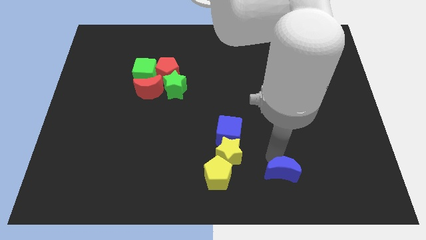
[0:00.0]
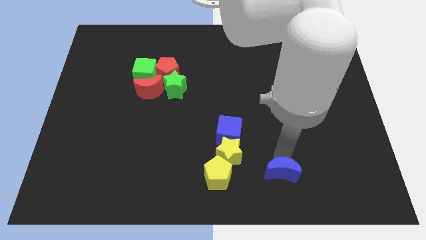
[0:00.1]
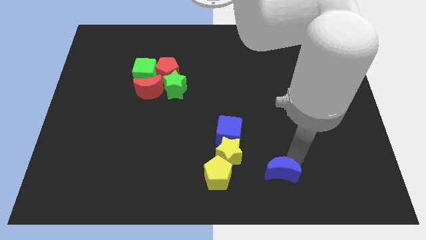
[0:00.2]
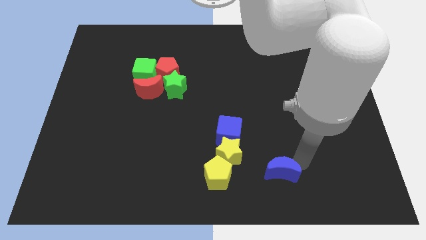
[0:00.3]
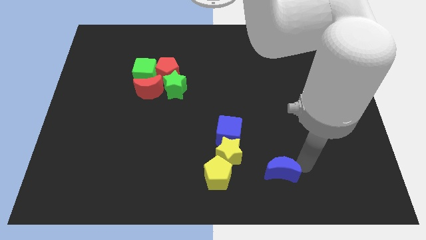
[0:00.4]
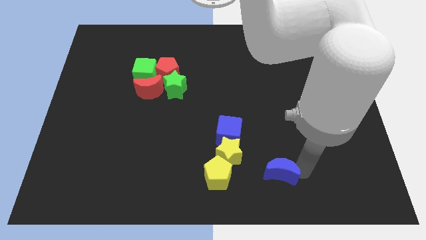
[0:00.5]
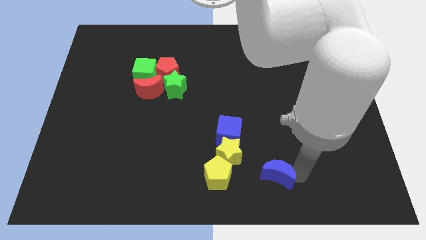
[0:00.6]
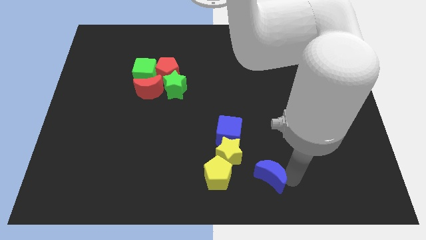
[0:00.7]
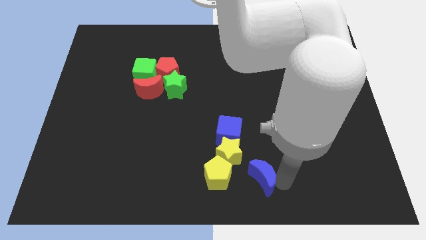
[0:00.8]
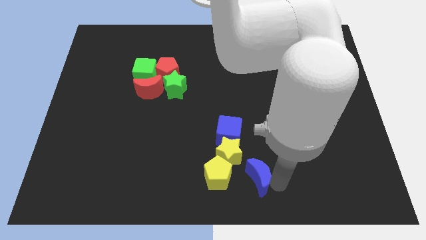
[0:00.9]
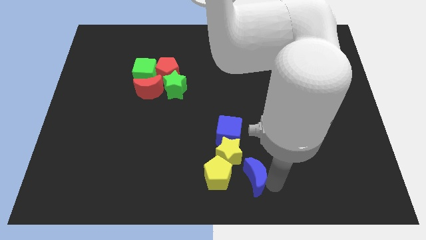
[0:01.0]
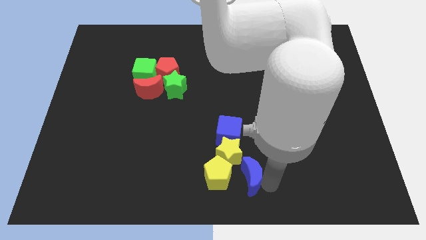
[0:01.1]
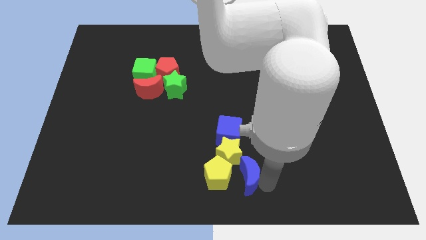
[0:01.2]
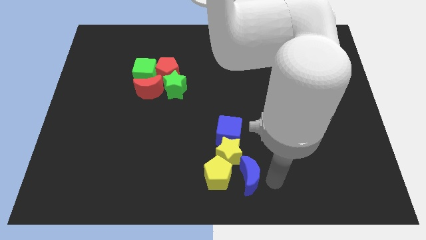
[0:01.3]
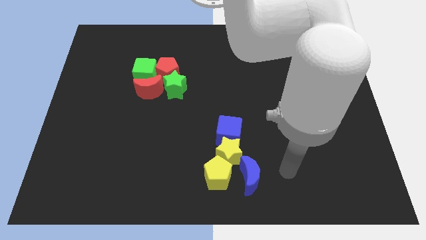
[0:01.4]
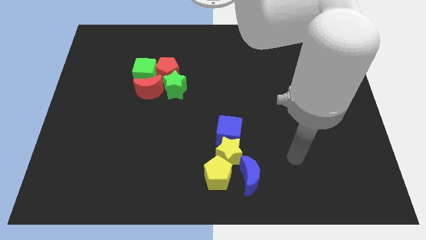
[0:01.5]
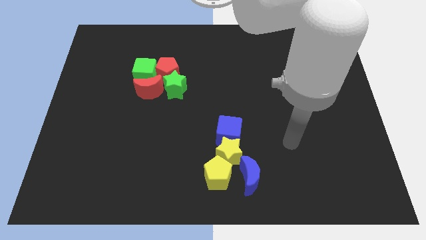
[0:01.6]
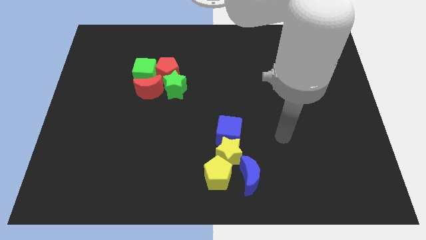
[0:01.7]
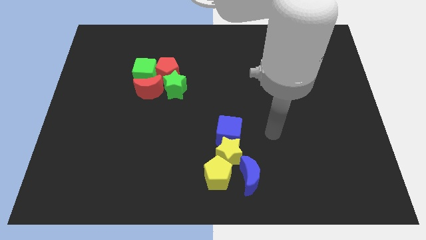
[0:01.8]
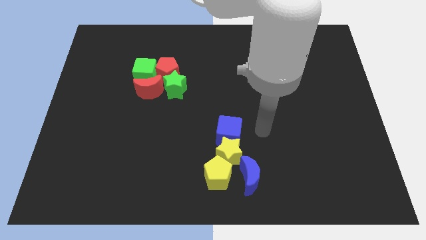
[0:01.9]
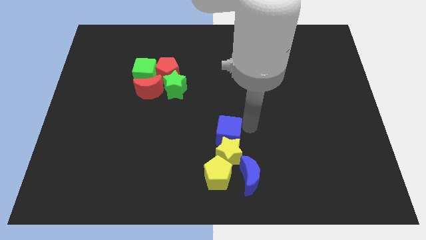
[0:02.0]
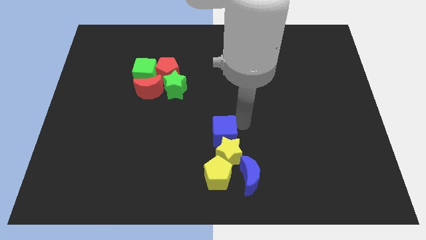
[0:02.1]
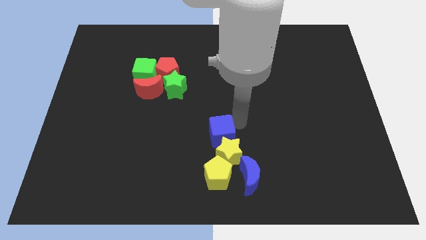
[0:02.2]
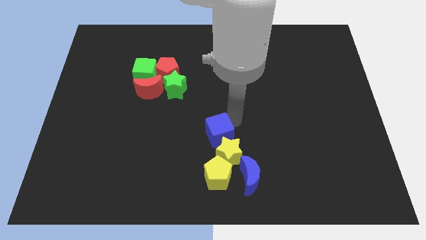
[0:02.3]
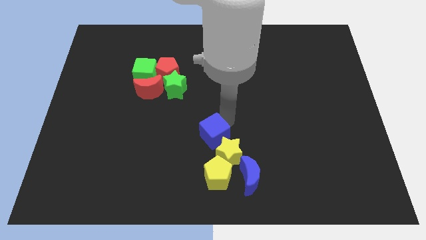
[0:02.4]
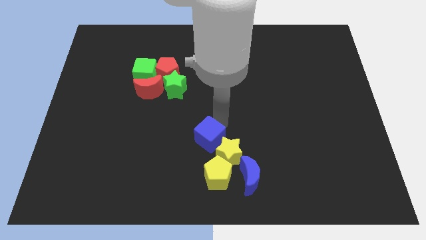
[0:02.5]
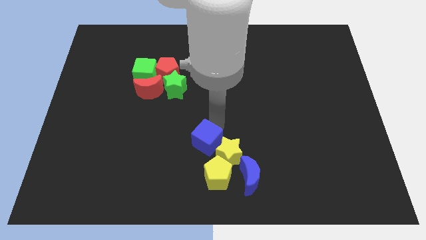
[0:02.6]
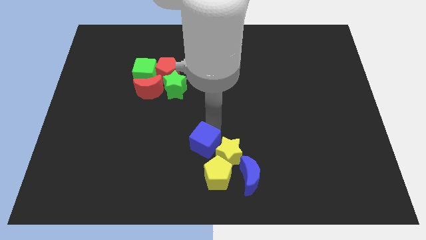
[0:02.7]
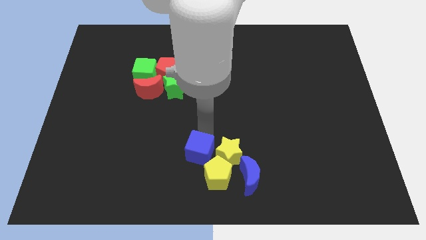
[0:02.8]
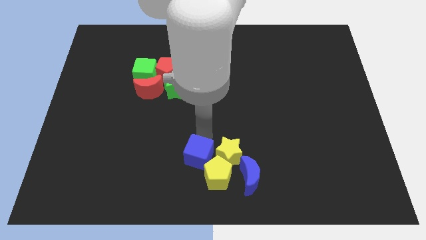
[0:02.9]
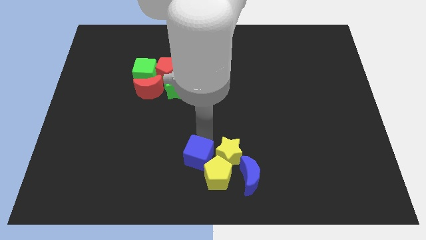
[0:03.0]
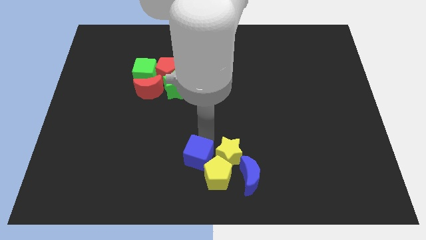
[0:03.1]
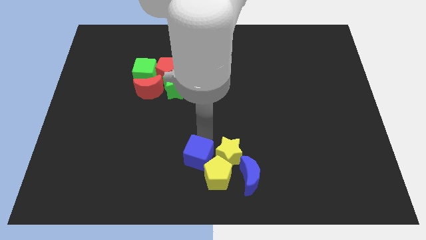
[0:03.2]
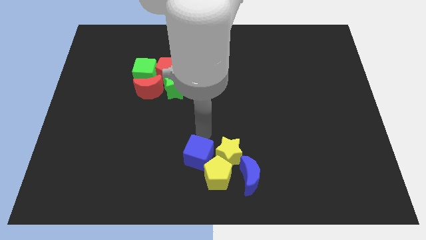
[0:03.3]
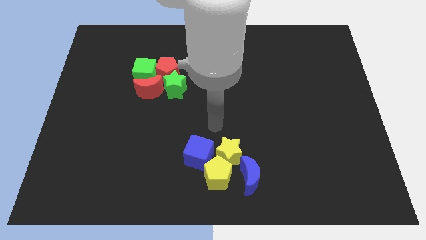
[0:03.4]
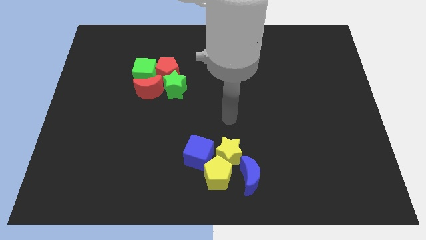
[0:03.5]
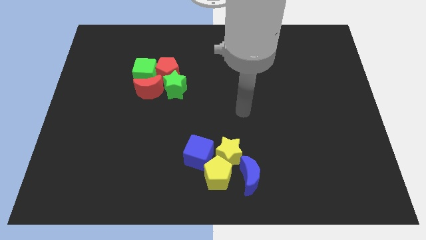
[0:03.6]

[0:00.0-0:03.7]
group up the blue blocks with the yellow blocks at the bottom side of the table

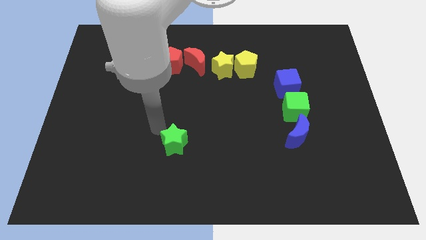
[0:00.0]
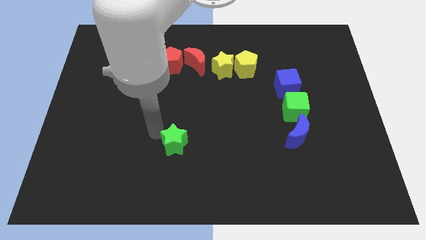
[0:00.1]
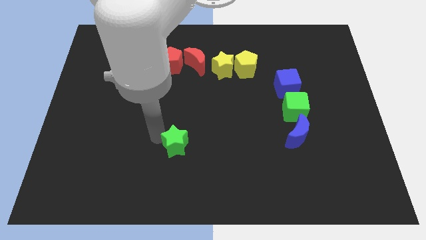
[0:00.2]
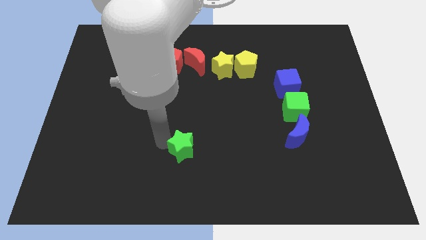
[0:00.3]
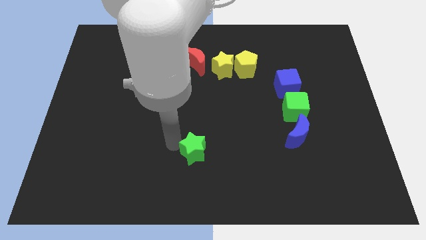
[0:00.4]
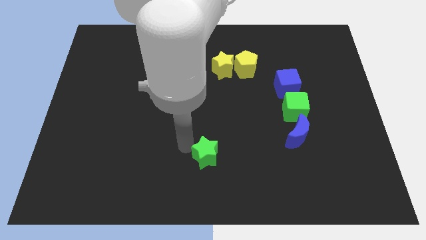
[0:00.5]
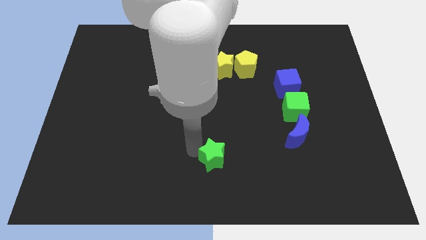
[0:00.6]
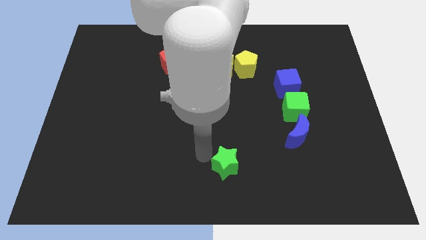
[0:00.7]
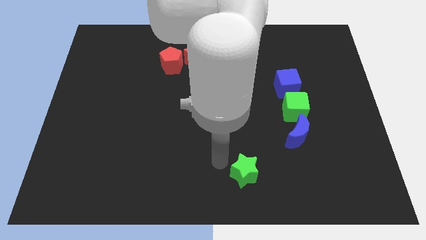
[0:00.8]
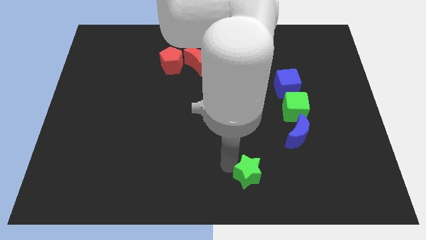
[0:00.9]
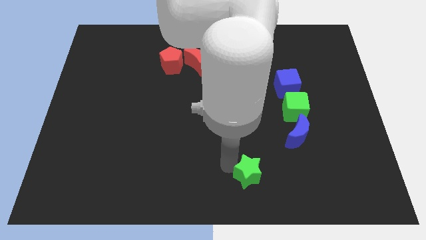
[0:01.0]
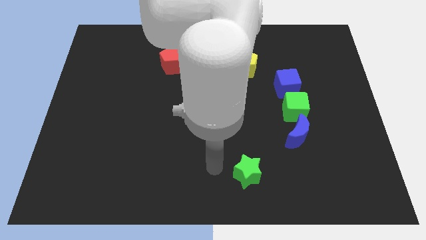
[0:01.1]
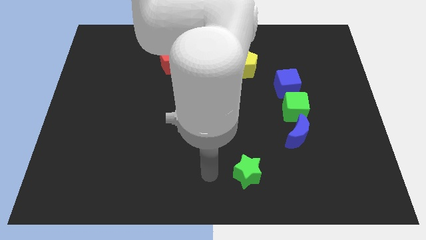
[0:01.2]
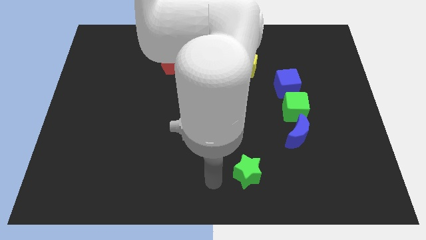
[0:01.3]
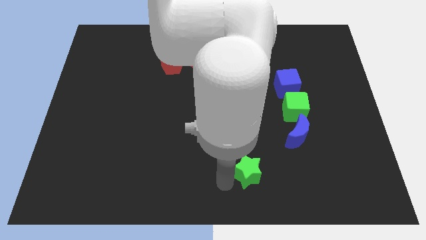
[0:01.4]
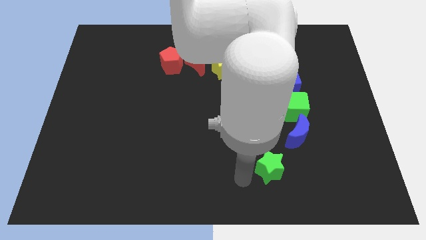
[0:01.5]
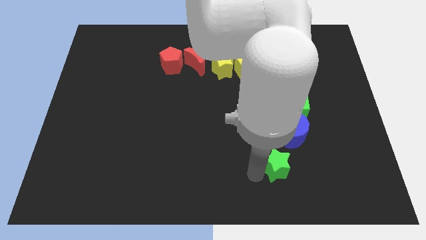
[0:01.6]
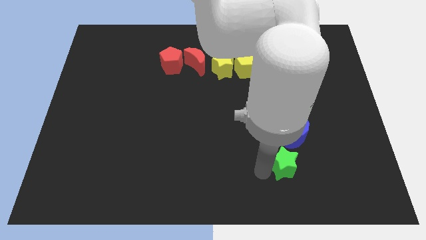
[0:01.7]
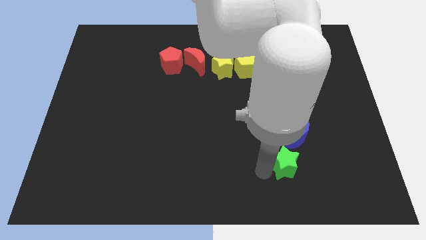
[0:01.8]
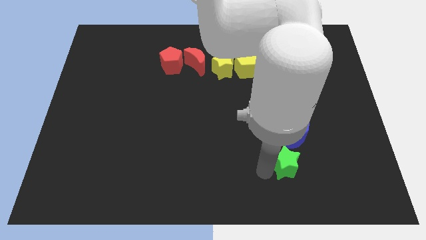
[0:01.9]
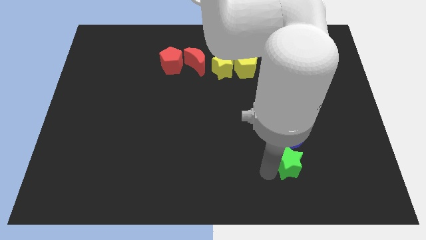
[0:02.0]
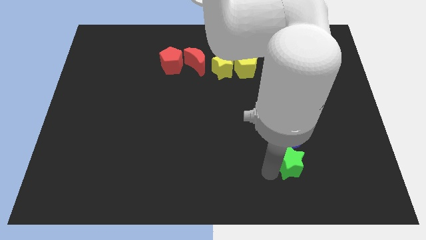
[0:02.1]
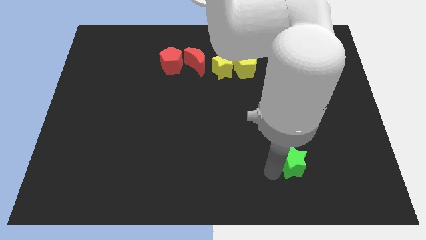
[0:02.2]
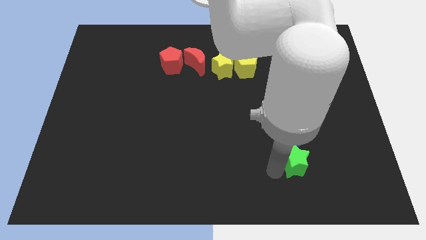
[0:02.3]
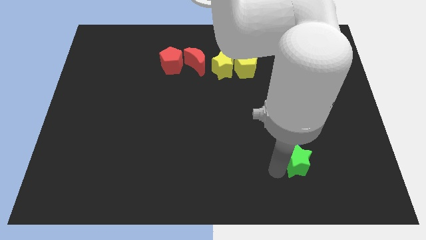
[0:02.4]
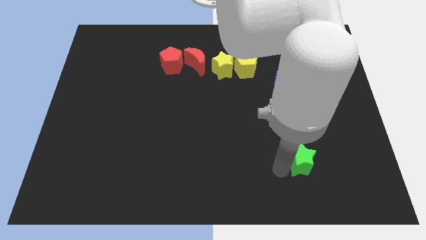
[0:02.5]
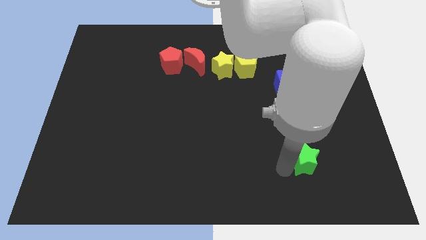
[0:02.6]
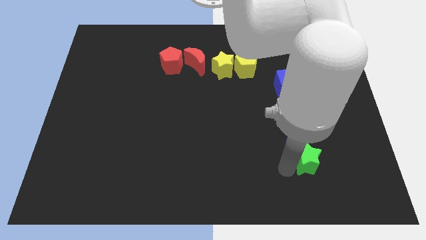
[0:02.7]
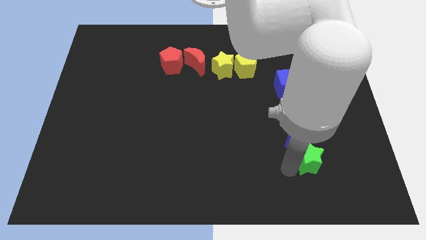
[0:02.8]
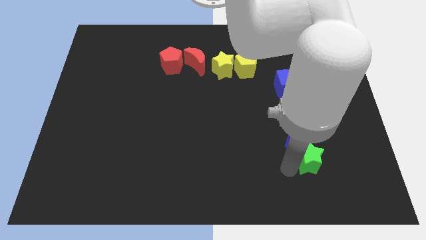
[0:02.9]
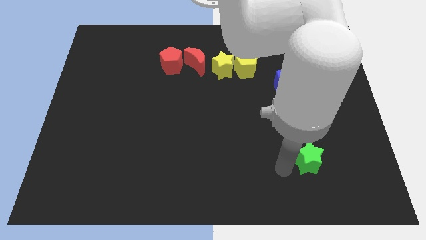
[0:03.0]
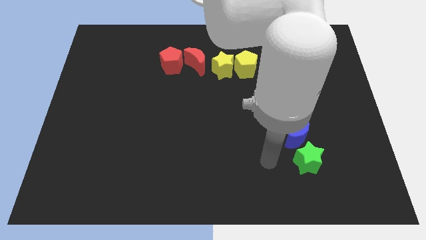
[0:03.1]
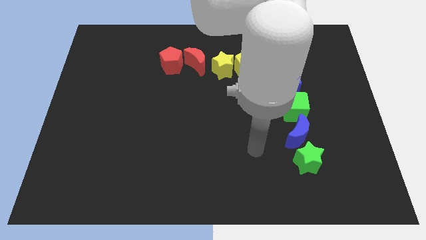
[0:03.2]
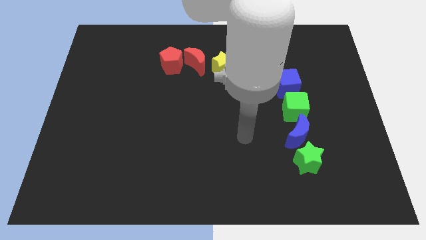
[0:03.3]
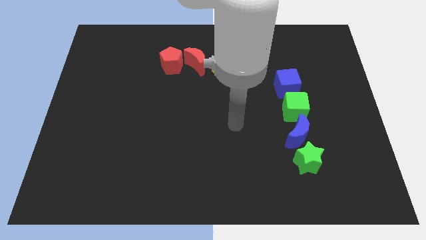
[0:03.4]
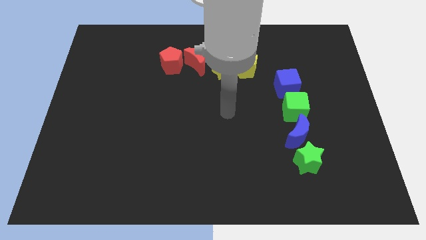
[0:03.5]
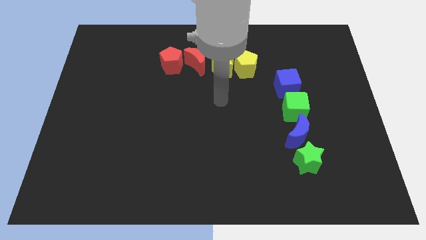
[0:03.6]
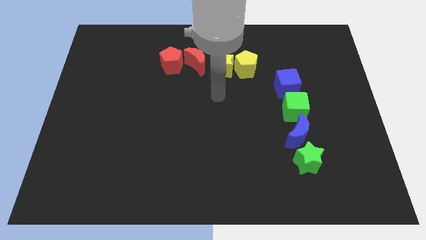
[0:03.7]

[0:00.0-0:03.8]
place a green star to the bottom of blue moon

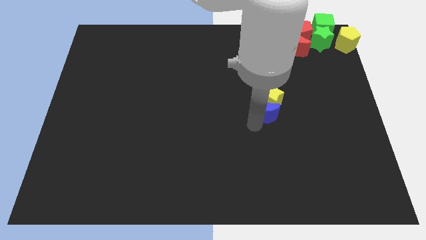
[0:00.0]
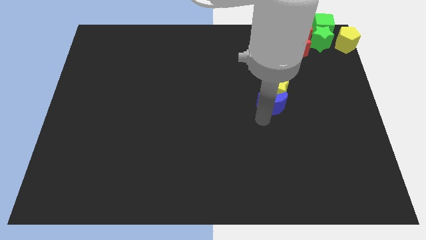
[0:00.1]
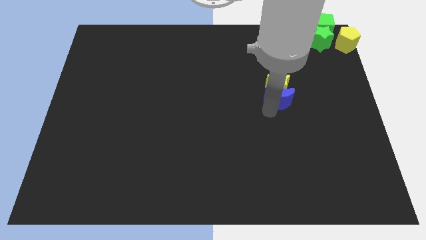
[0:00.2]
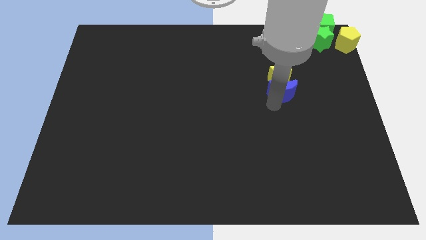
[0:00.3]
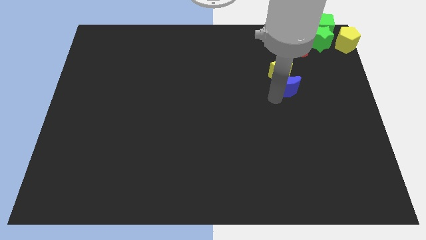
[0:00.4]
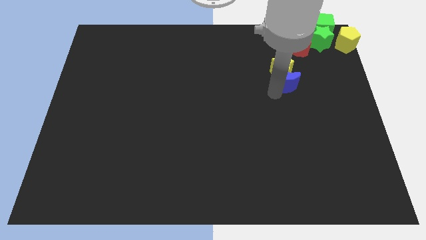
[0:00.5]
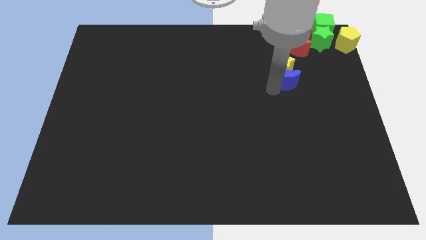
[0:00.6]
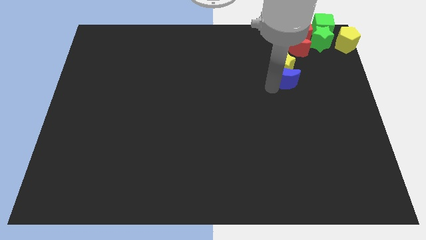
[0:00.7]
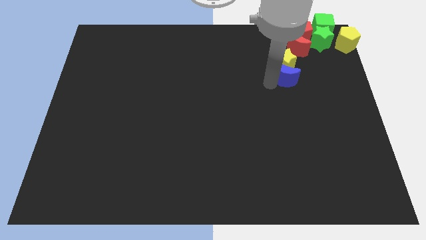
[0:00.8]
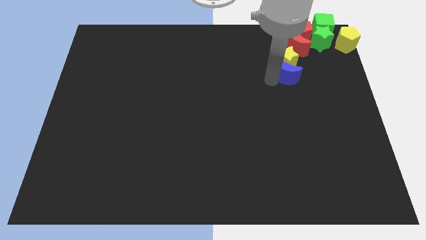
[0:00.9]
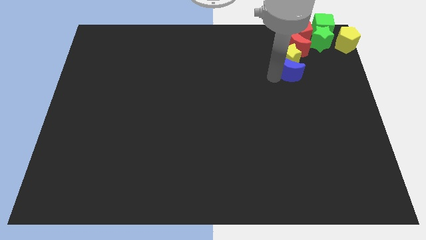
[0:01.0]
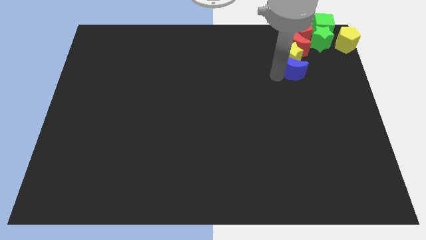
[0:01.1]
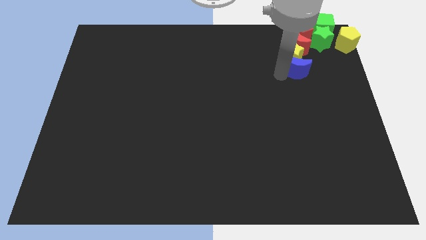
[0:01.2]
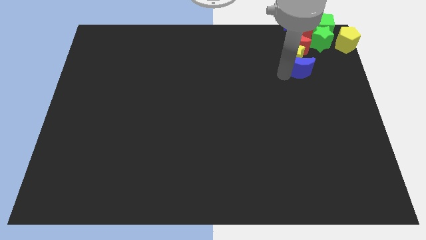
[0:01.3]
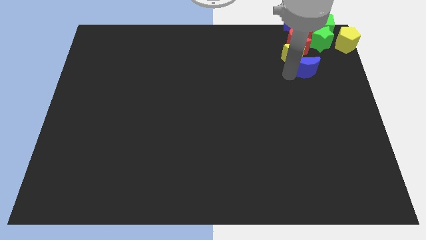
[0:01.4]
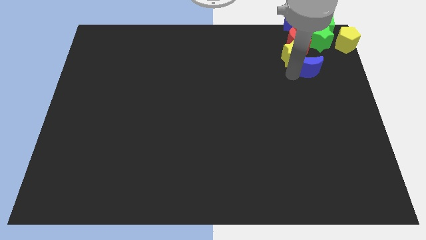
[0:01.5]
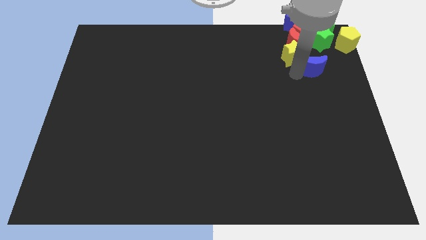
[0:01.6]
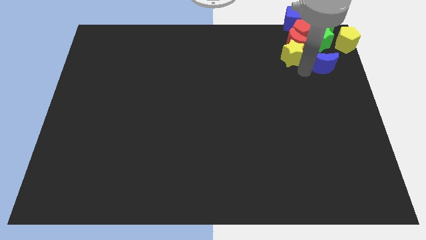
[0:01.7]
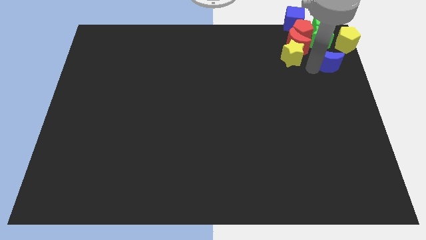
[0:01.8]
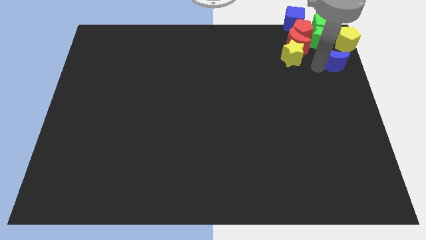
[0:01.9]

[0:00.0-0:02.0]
move the yellow star and blue moon into the group of blocks
